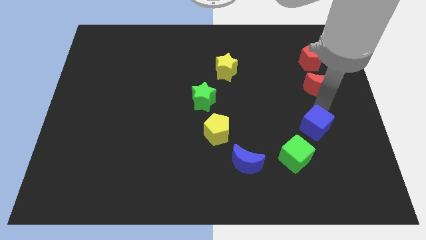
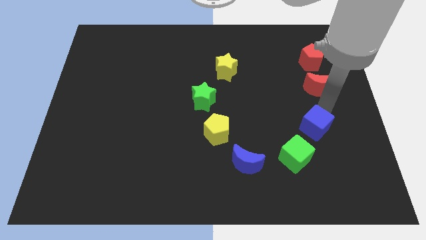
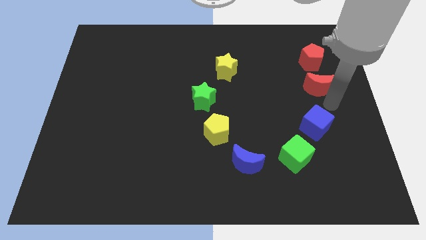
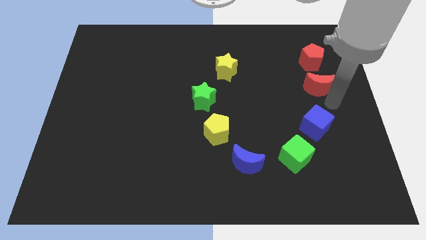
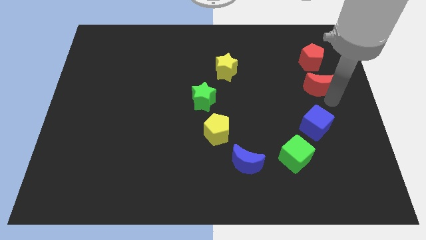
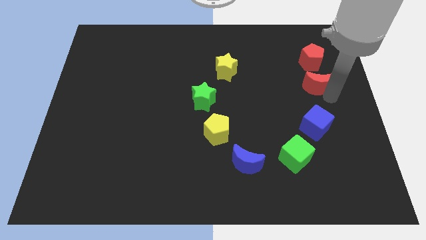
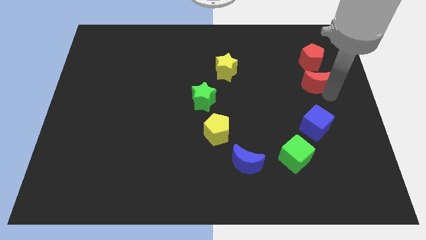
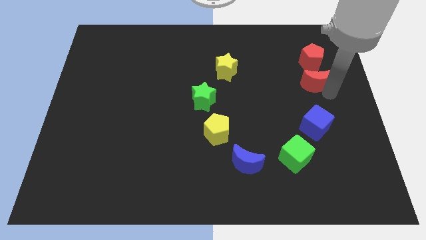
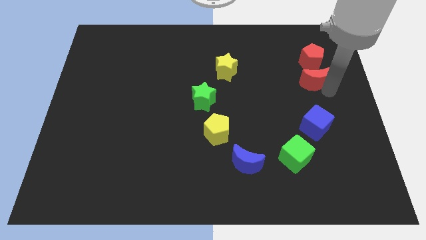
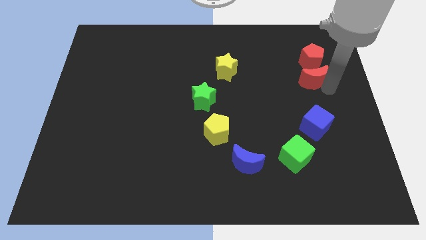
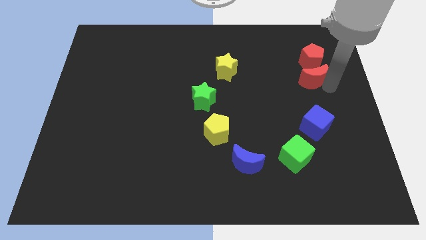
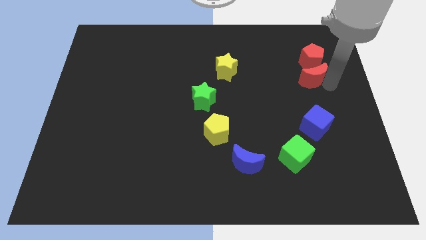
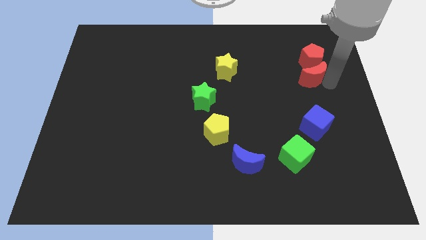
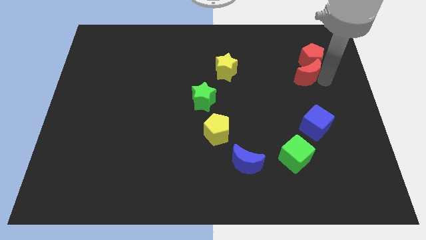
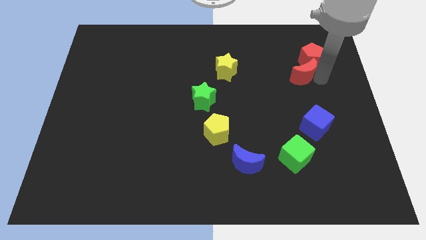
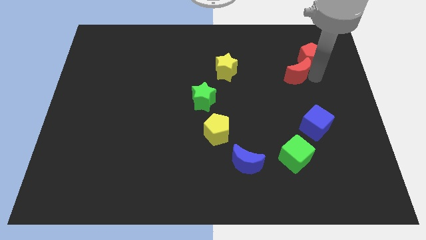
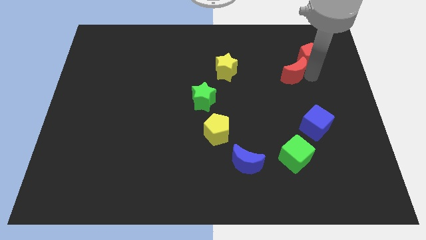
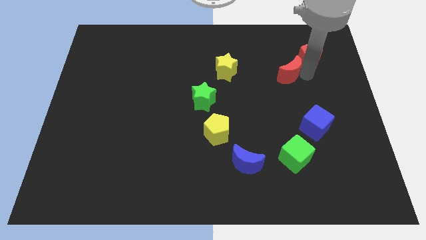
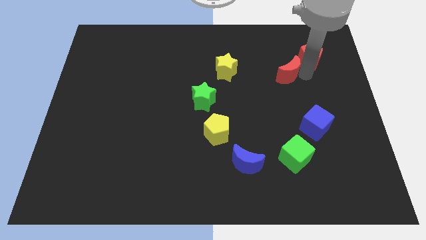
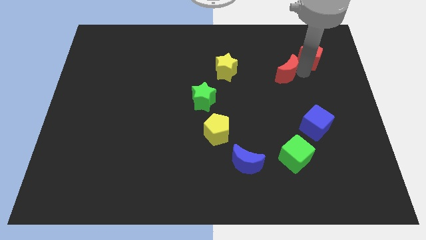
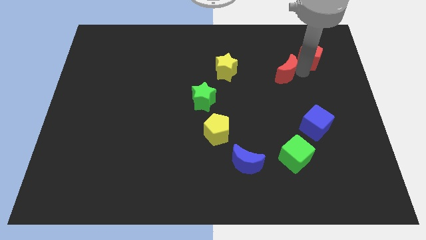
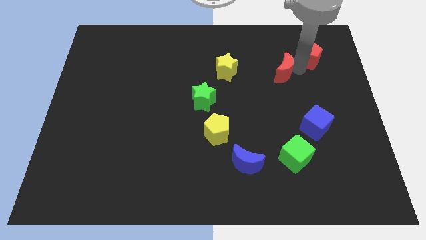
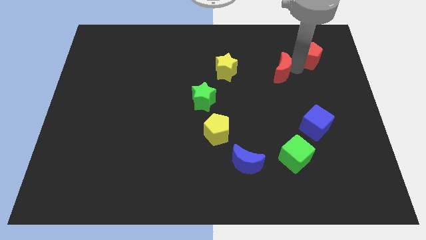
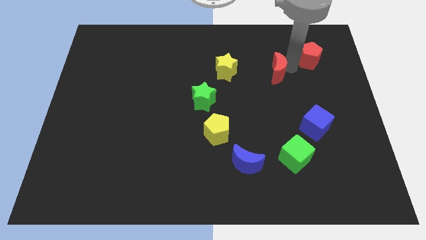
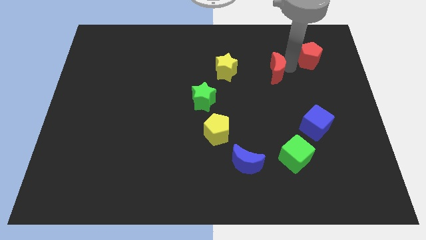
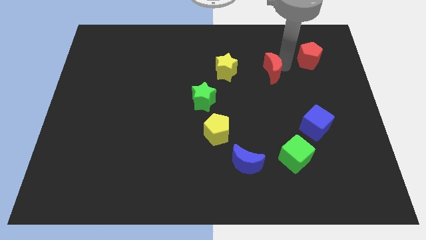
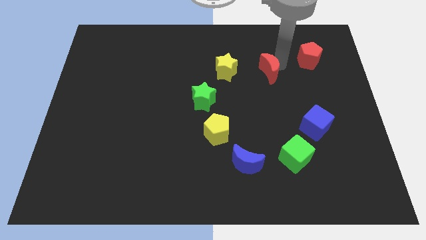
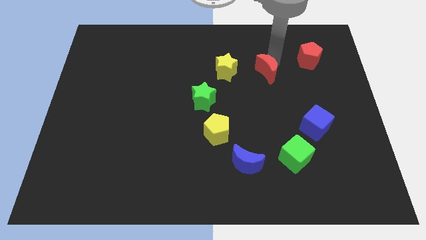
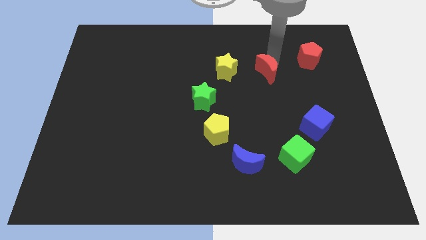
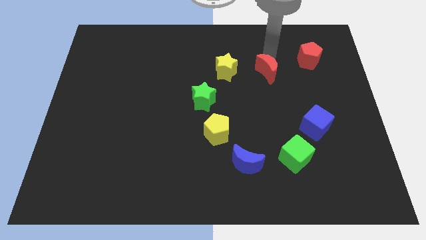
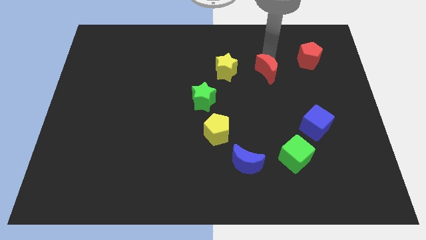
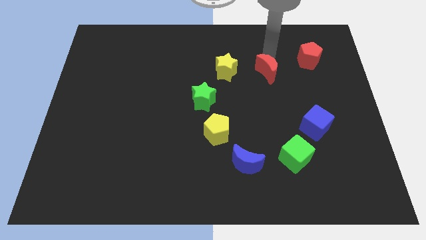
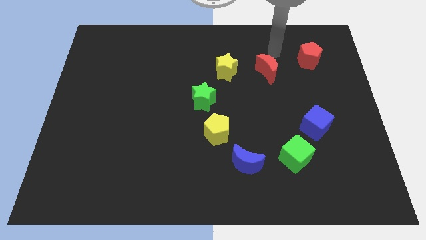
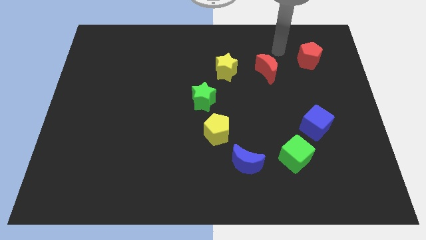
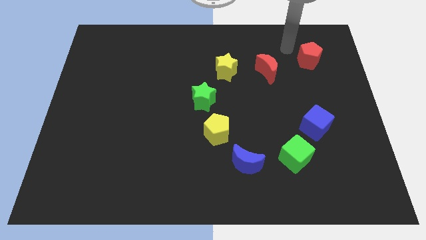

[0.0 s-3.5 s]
push the red moon towards the yellow star

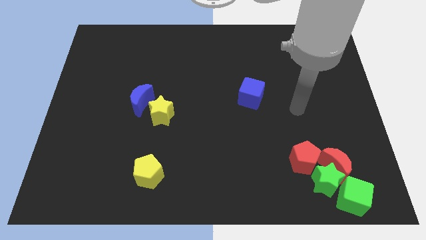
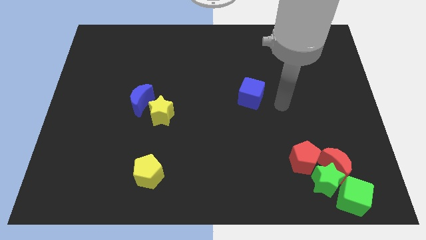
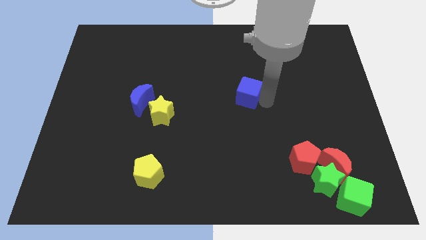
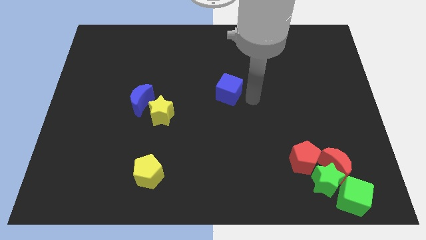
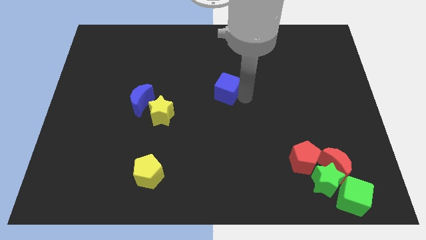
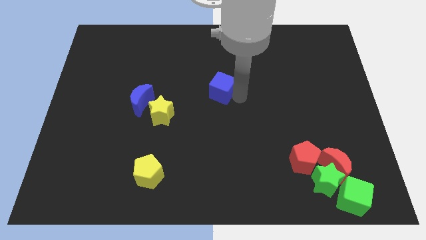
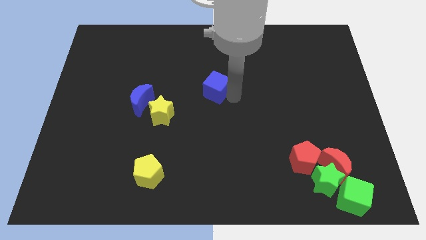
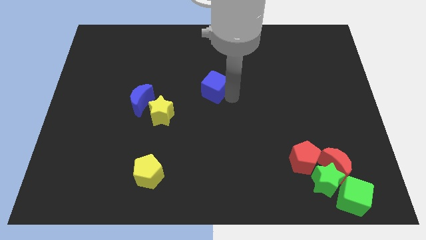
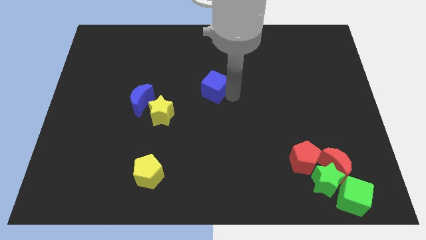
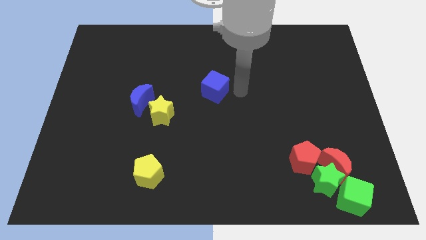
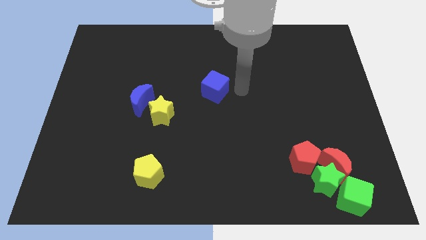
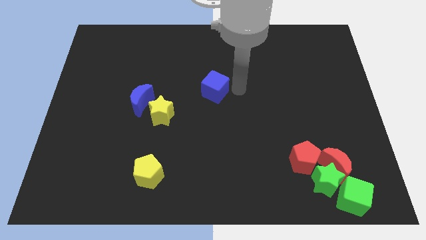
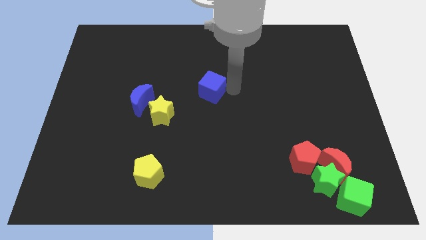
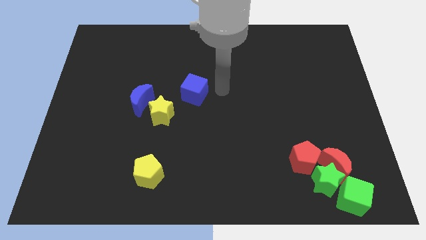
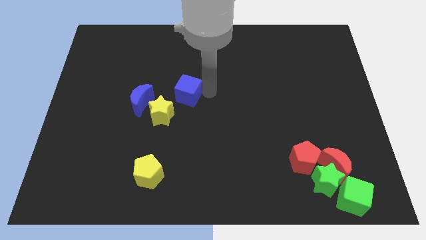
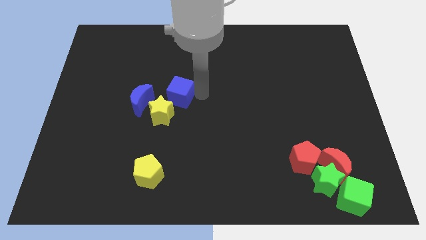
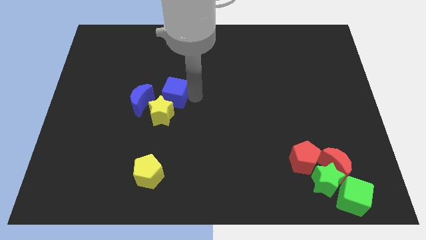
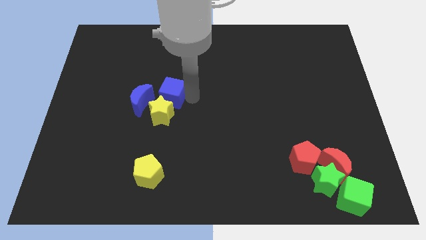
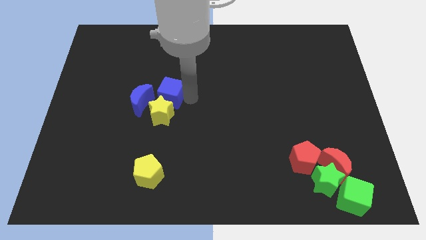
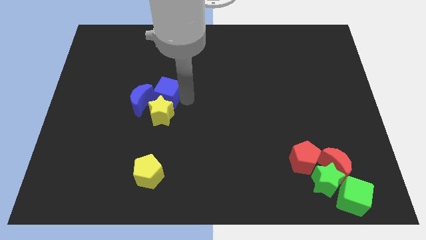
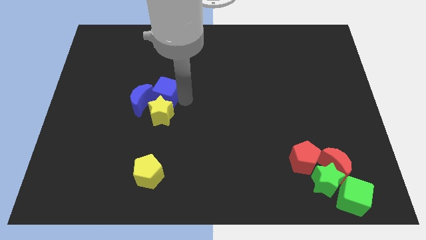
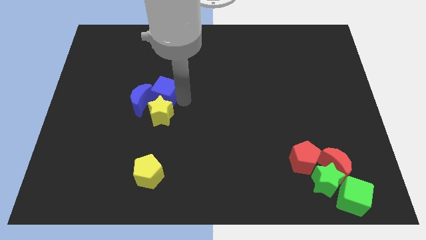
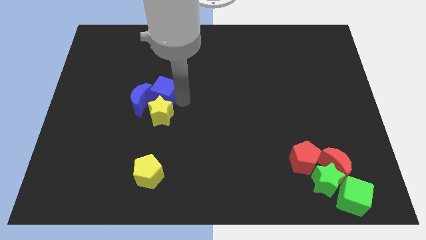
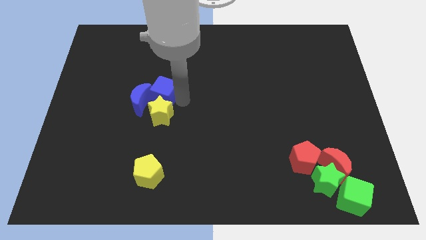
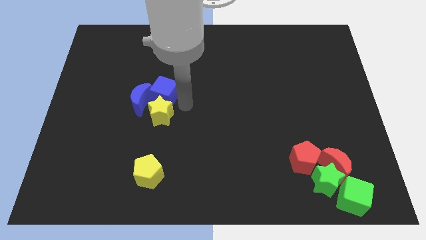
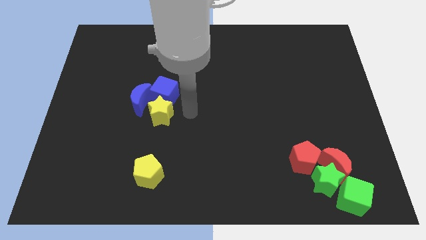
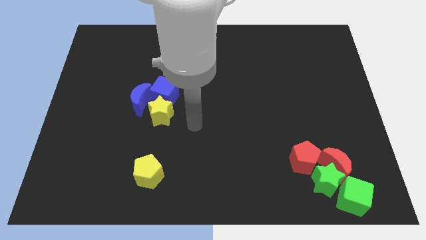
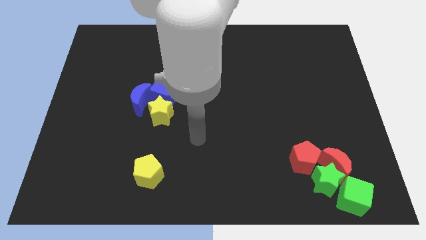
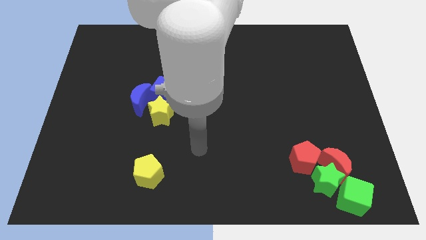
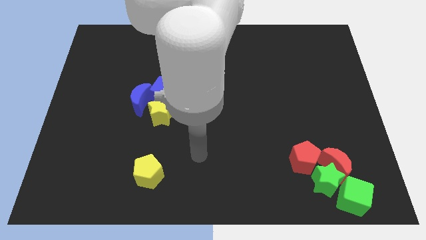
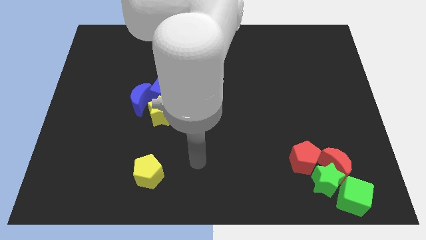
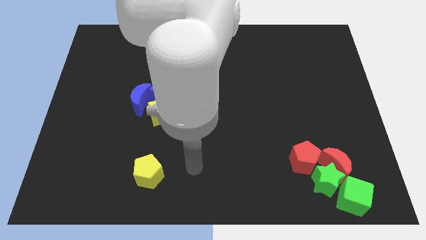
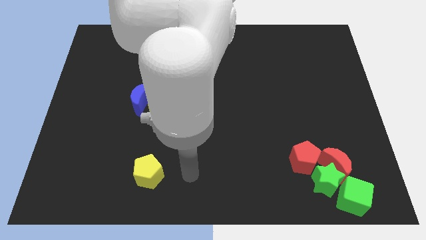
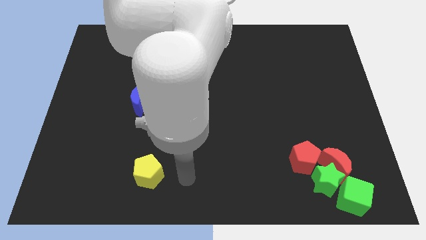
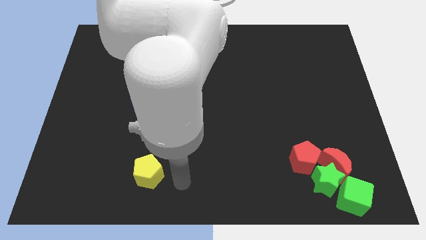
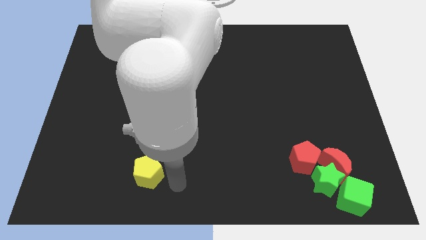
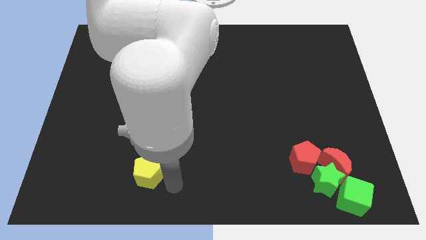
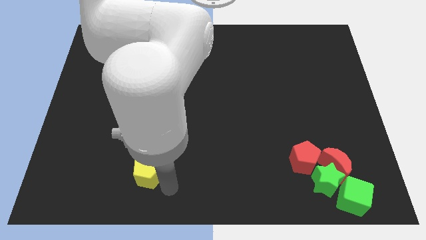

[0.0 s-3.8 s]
place the blue cube towards the top right side of the blue crescent

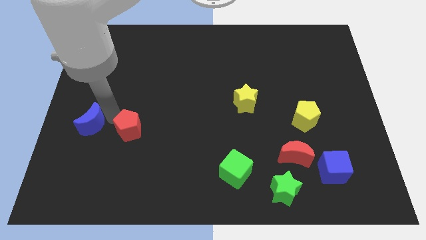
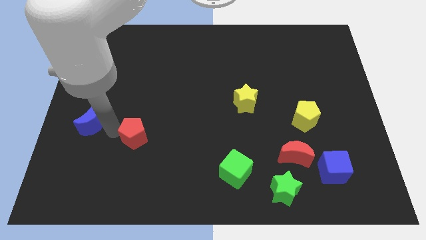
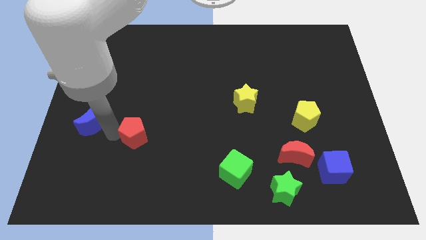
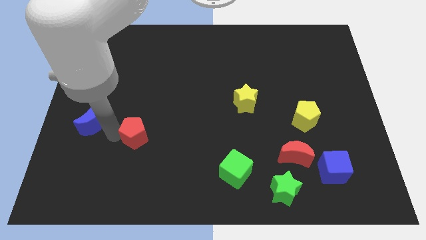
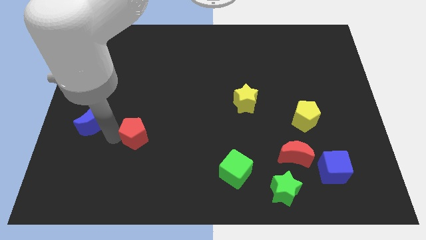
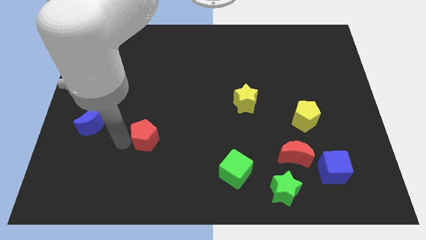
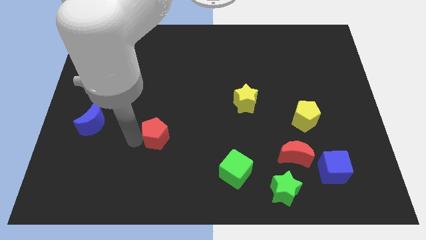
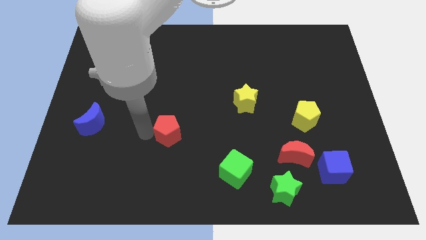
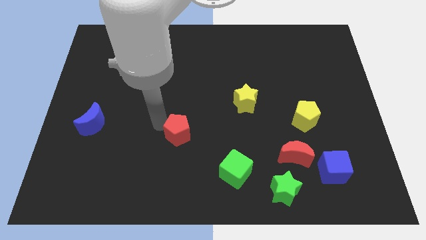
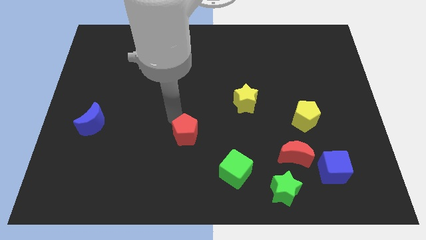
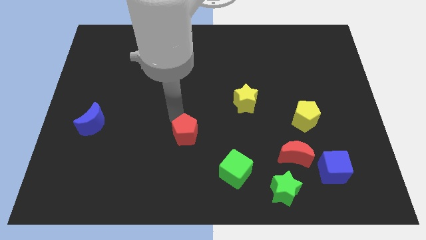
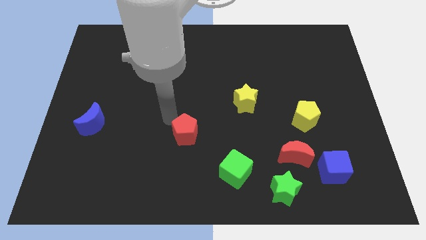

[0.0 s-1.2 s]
place the red pentagon diagonally to the green cube

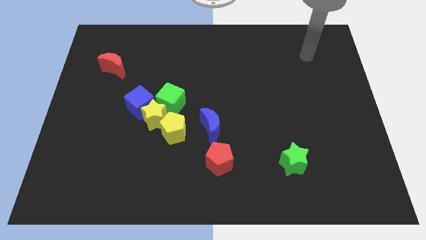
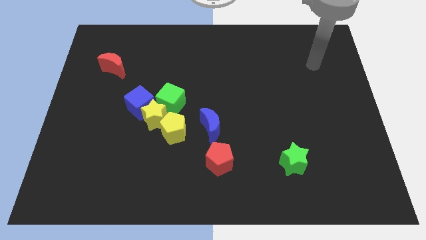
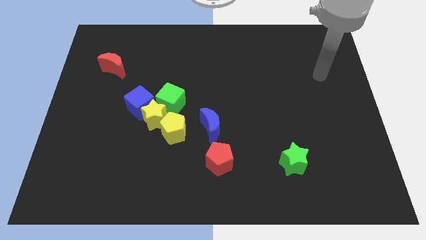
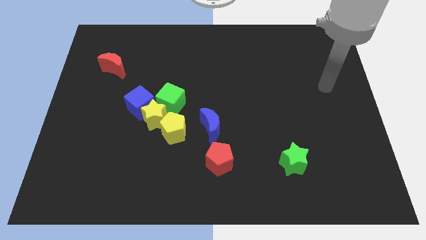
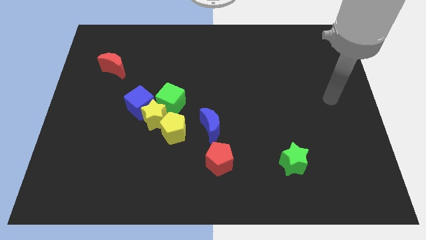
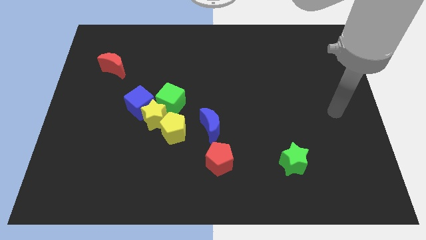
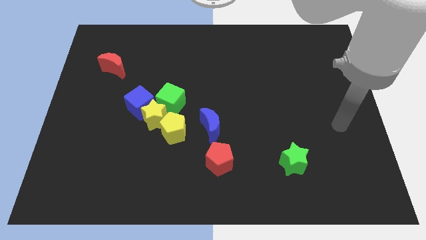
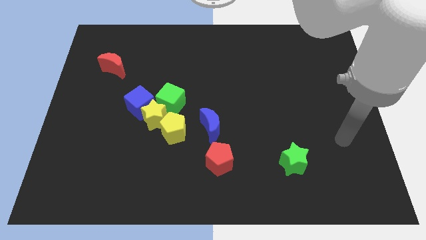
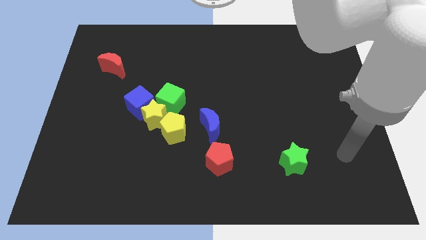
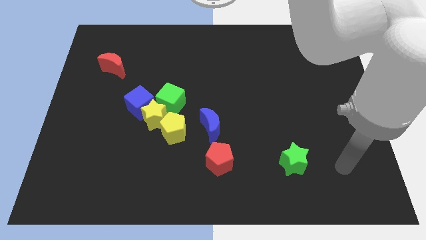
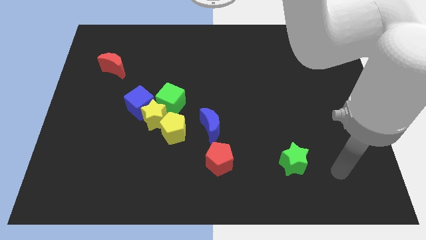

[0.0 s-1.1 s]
point the arm to the right of the green star
